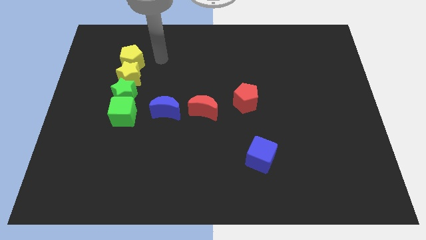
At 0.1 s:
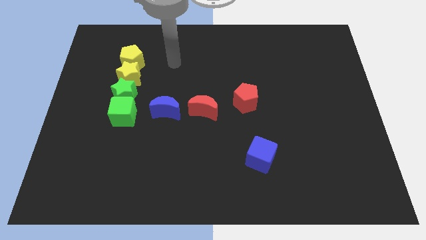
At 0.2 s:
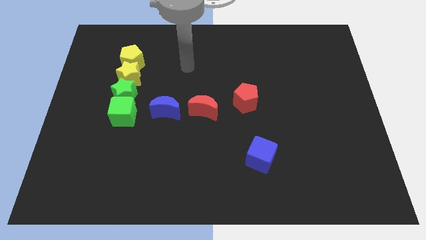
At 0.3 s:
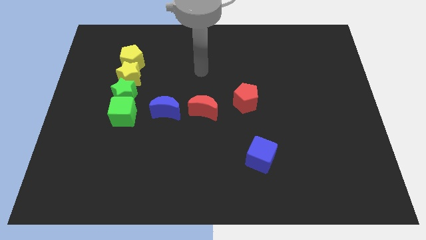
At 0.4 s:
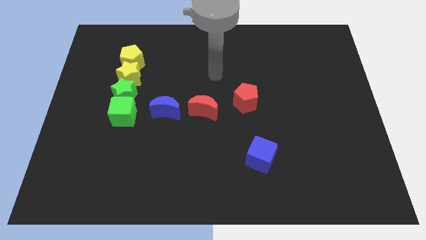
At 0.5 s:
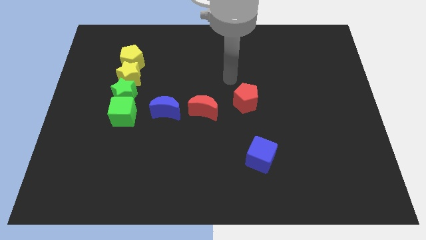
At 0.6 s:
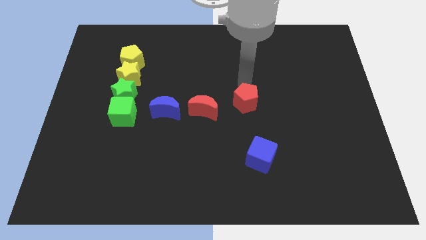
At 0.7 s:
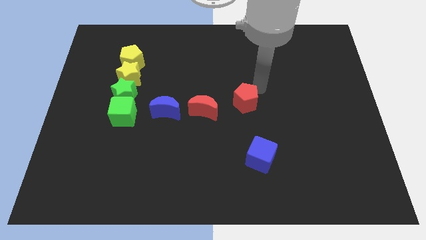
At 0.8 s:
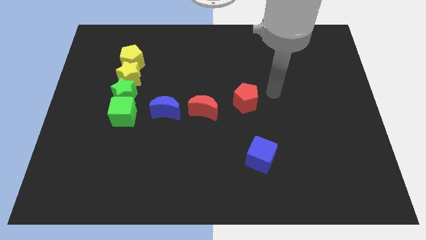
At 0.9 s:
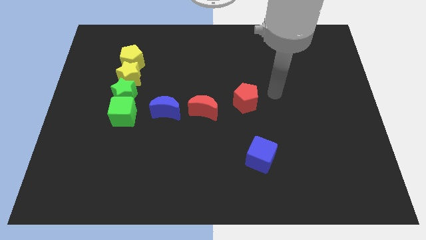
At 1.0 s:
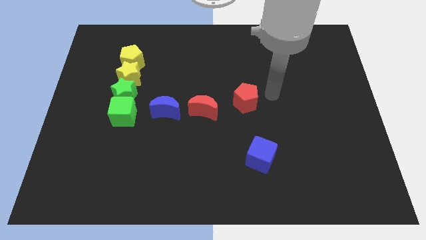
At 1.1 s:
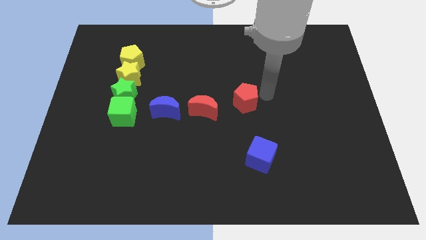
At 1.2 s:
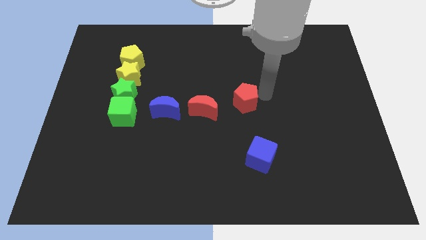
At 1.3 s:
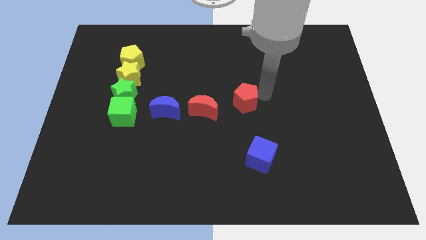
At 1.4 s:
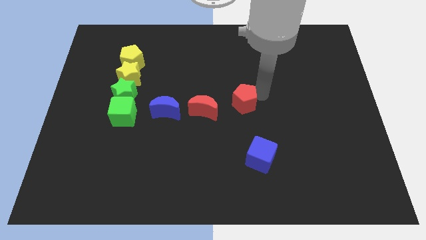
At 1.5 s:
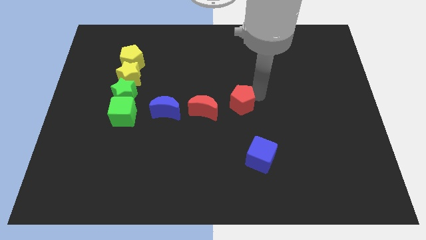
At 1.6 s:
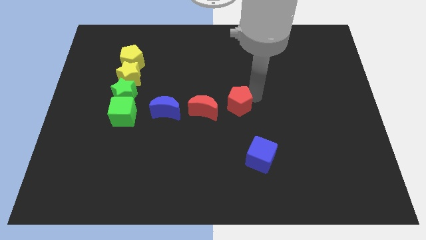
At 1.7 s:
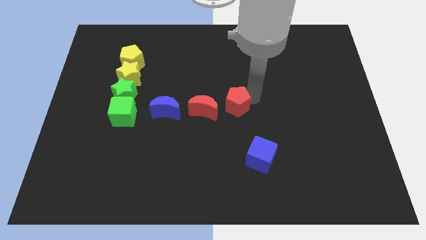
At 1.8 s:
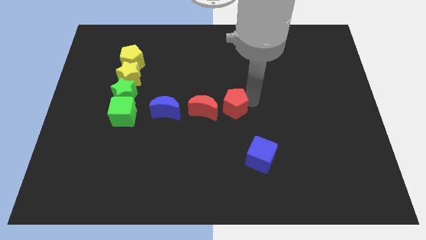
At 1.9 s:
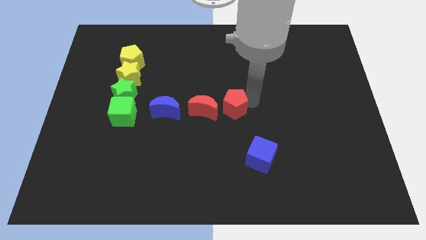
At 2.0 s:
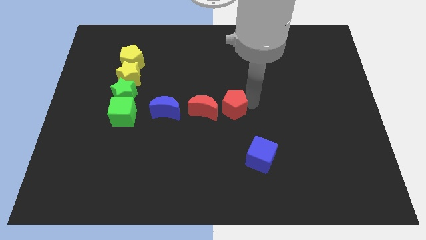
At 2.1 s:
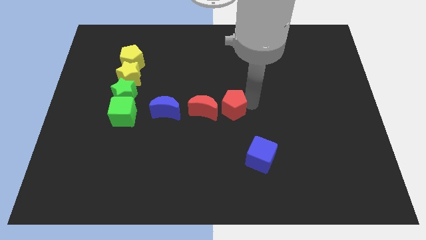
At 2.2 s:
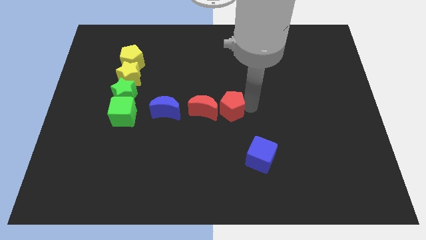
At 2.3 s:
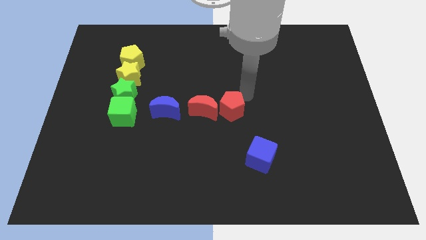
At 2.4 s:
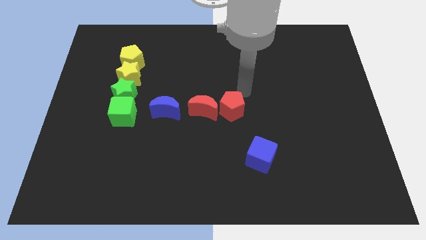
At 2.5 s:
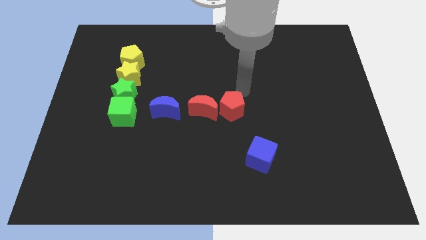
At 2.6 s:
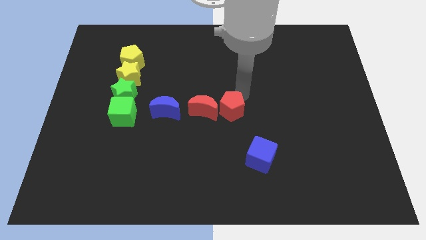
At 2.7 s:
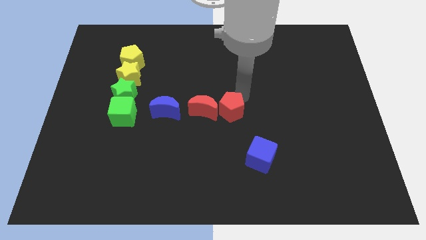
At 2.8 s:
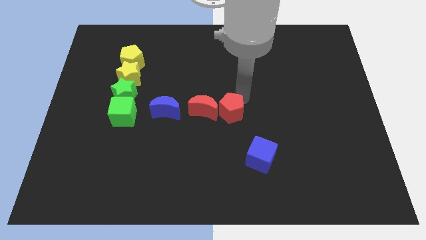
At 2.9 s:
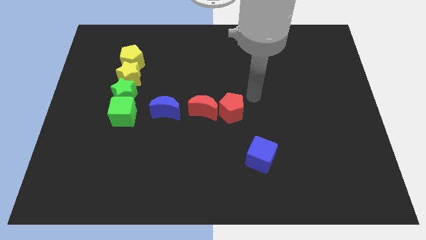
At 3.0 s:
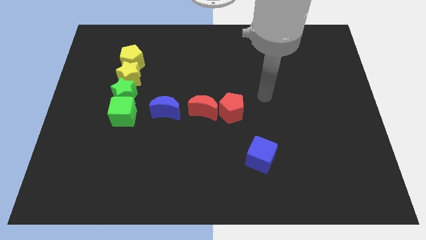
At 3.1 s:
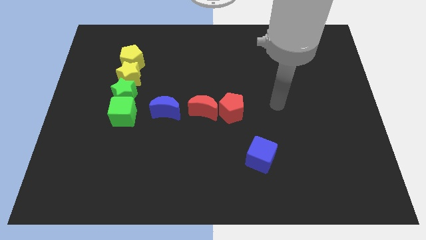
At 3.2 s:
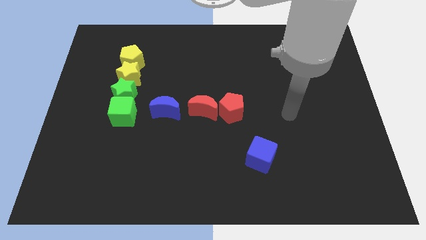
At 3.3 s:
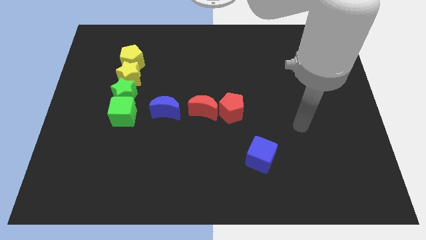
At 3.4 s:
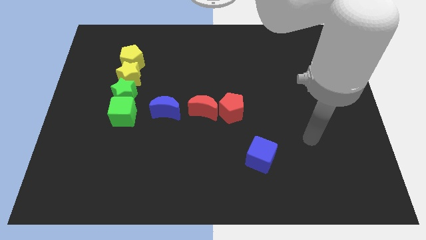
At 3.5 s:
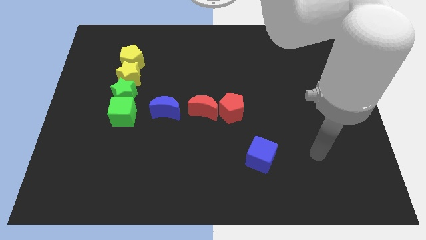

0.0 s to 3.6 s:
move the red pentagon close to the red crescent

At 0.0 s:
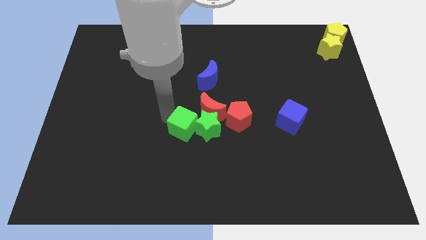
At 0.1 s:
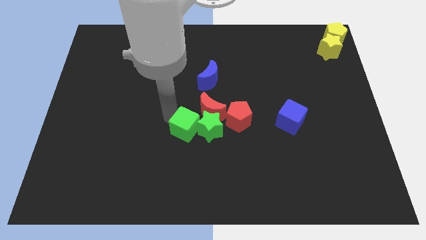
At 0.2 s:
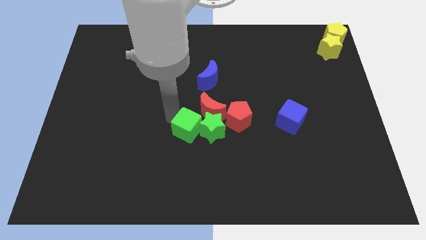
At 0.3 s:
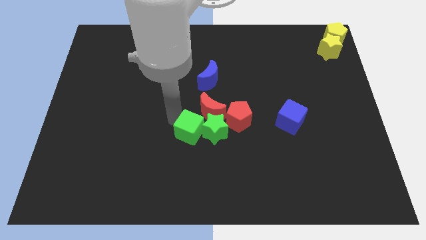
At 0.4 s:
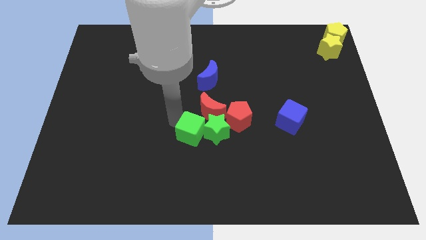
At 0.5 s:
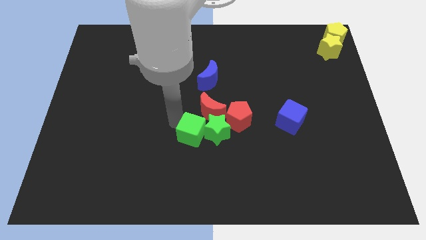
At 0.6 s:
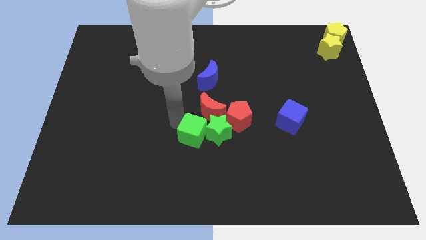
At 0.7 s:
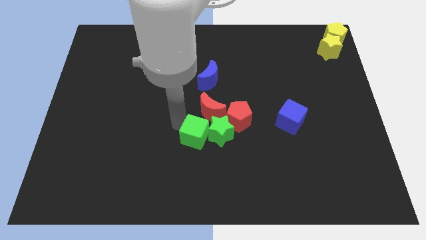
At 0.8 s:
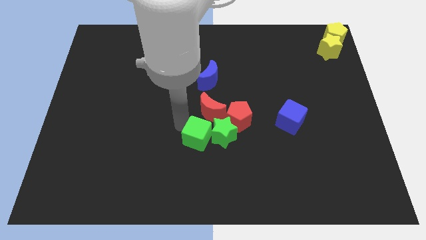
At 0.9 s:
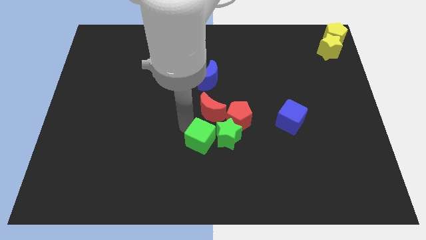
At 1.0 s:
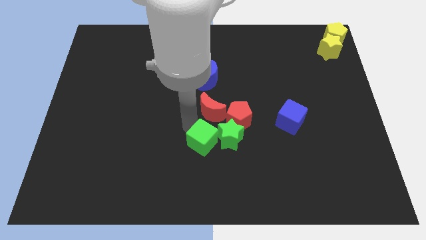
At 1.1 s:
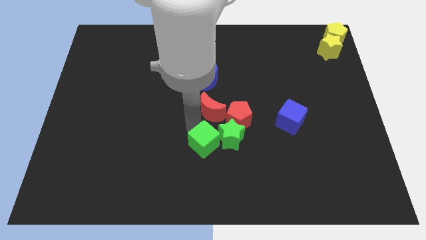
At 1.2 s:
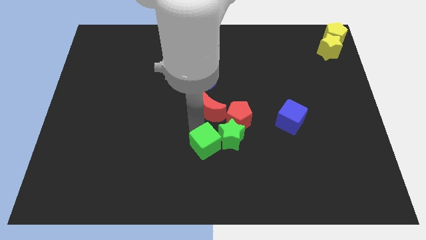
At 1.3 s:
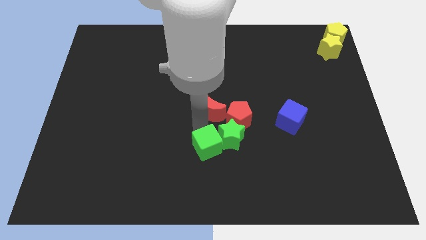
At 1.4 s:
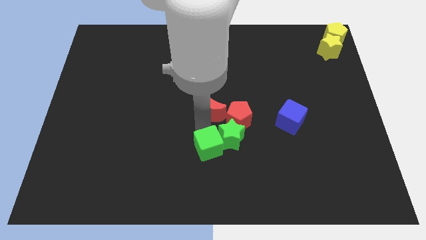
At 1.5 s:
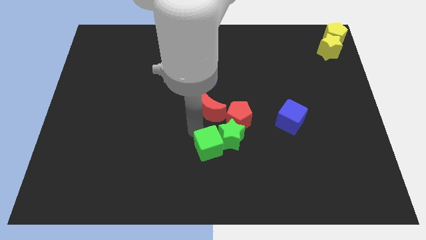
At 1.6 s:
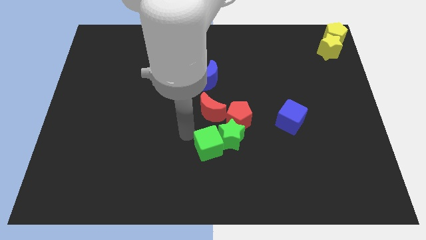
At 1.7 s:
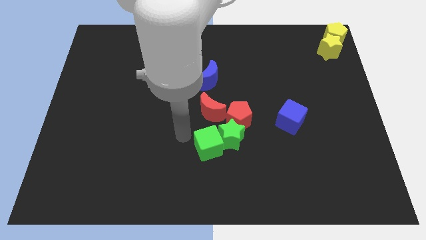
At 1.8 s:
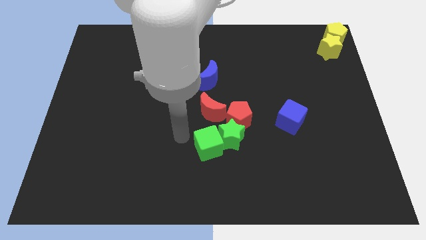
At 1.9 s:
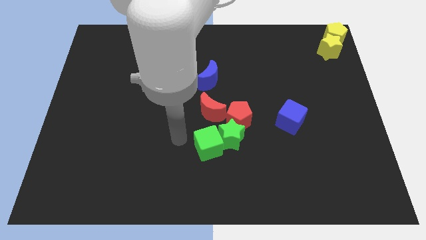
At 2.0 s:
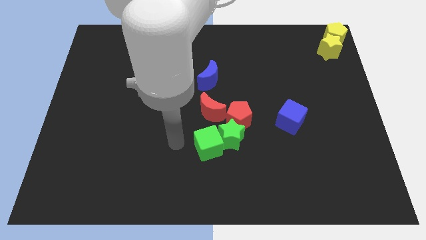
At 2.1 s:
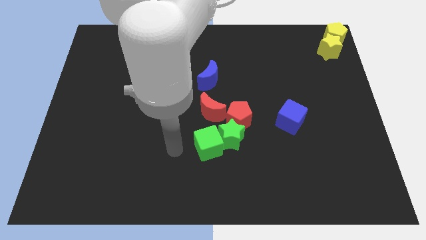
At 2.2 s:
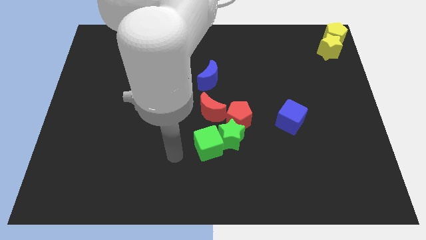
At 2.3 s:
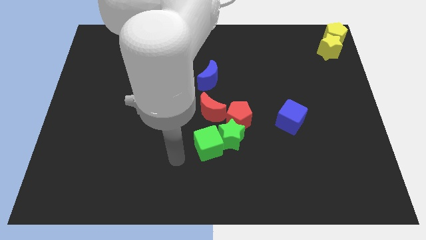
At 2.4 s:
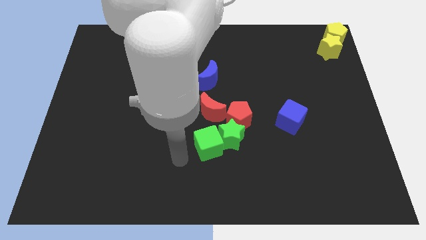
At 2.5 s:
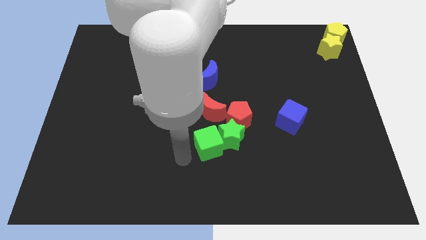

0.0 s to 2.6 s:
push the green cube and green star towards bottom of red pentagon

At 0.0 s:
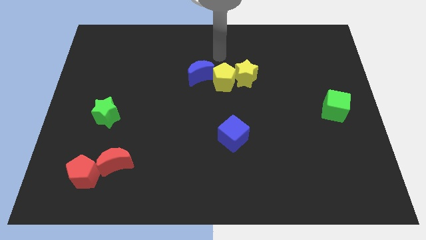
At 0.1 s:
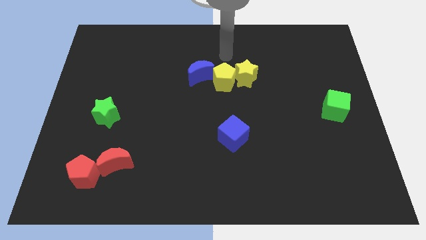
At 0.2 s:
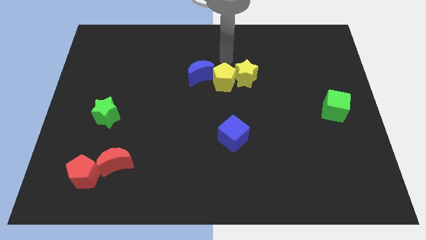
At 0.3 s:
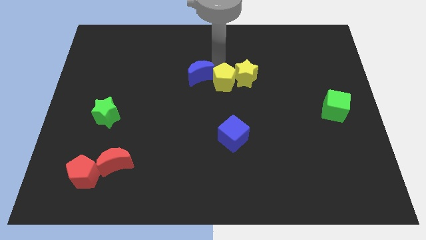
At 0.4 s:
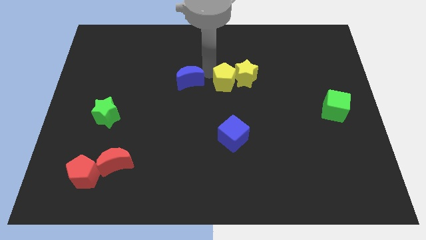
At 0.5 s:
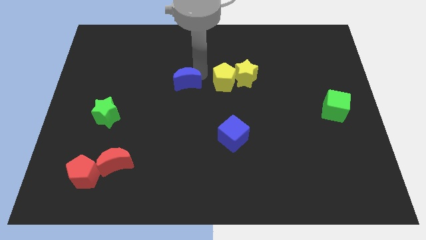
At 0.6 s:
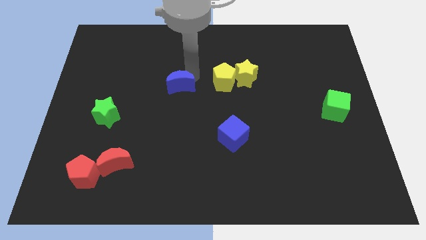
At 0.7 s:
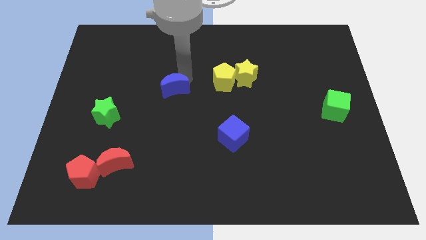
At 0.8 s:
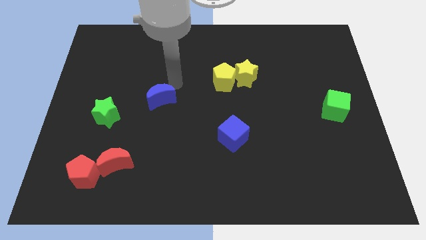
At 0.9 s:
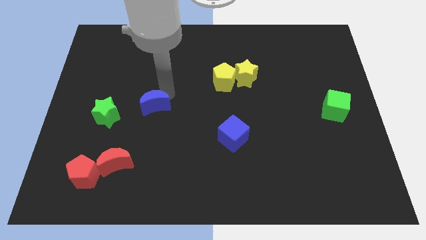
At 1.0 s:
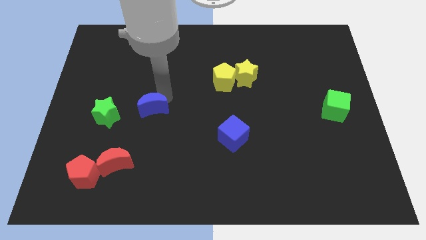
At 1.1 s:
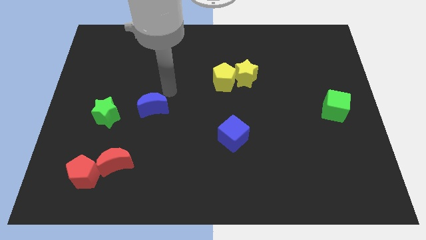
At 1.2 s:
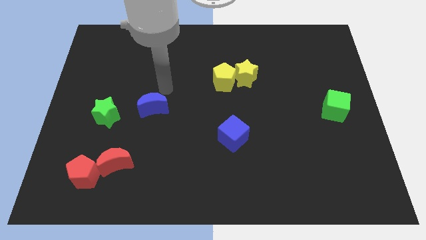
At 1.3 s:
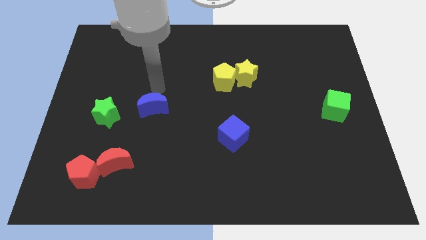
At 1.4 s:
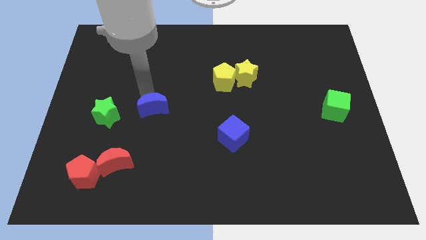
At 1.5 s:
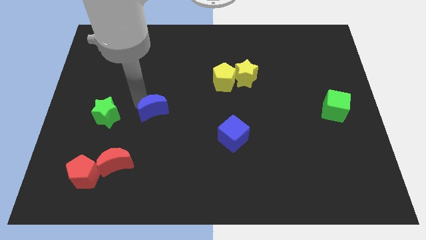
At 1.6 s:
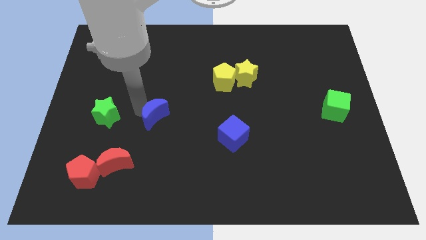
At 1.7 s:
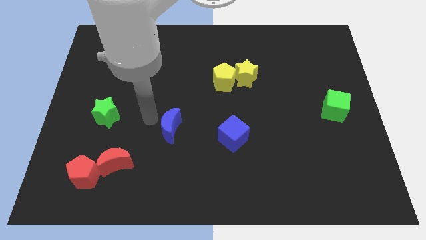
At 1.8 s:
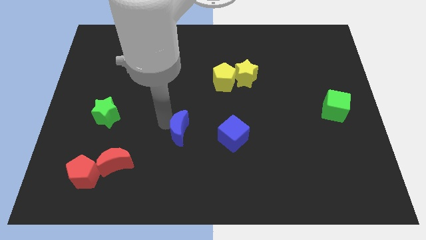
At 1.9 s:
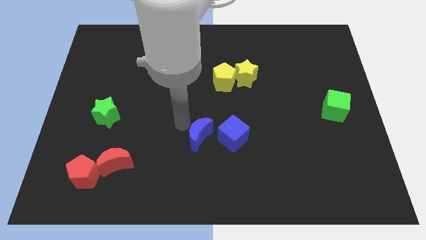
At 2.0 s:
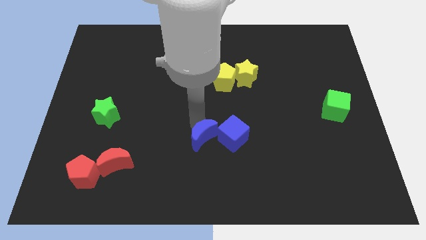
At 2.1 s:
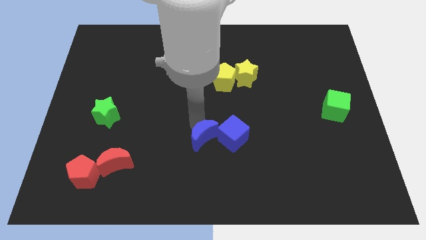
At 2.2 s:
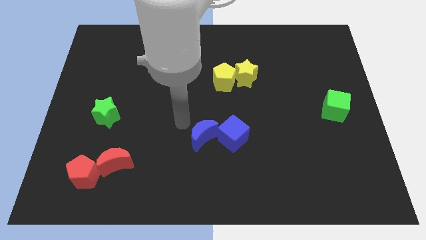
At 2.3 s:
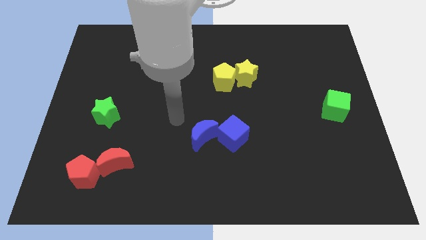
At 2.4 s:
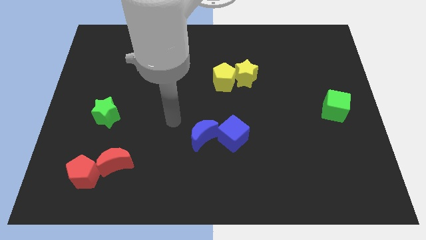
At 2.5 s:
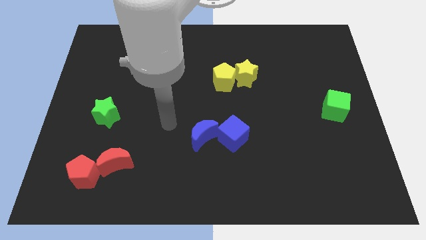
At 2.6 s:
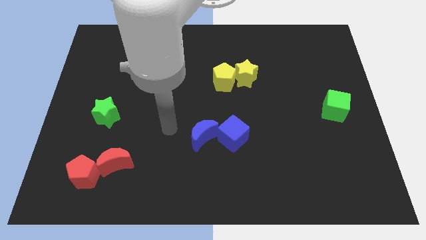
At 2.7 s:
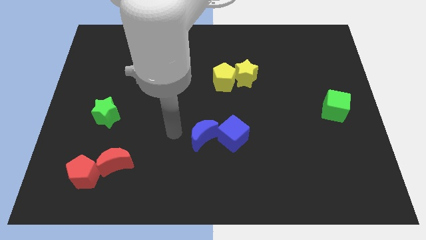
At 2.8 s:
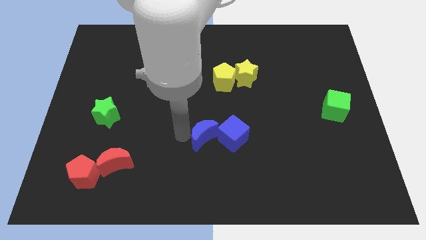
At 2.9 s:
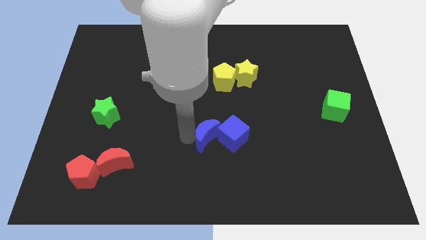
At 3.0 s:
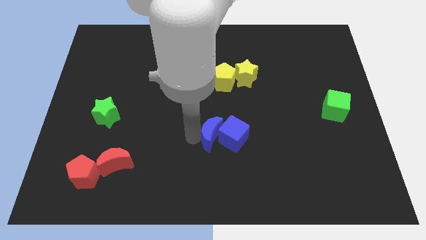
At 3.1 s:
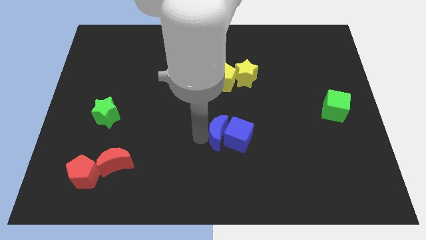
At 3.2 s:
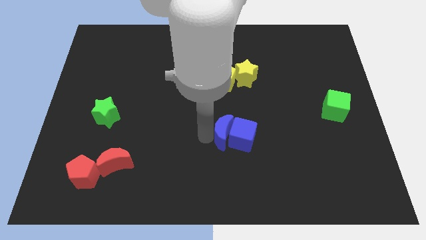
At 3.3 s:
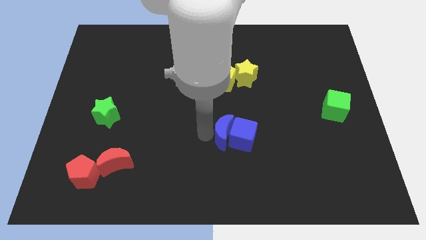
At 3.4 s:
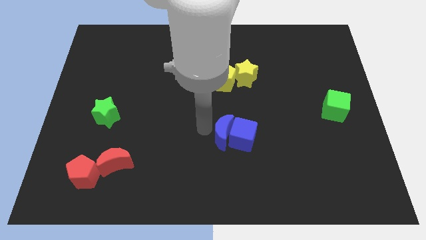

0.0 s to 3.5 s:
push the blue moon into the blue cube
